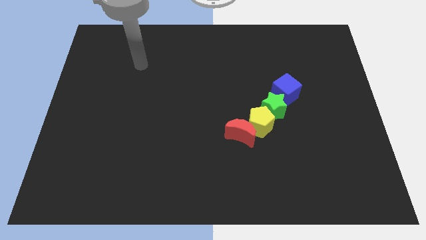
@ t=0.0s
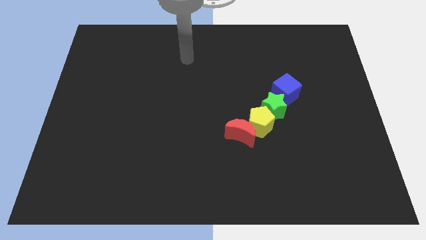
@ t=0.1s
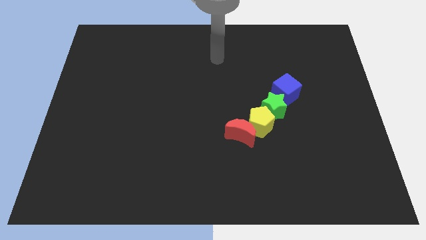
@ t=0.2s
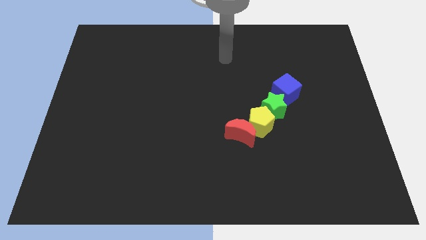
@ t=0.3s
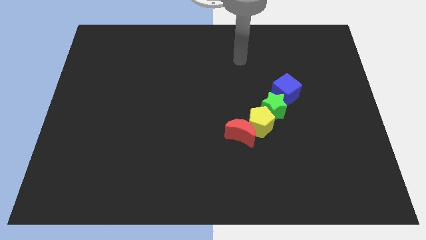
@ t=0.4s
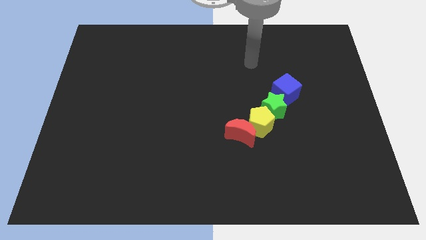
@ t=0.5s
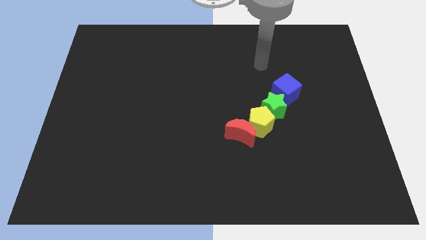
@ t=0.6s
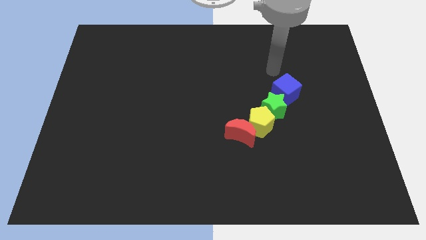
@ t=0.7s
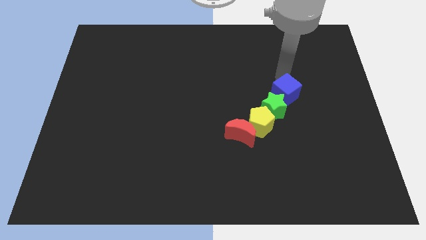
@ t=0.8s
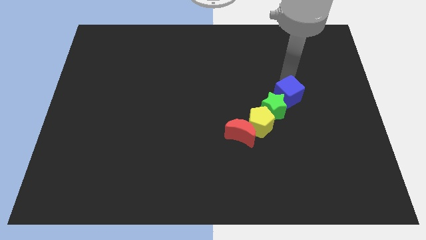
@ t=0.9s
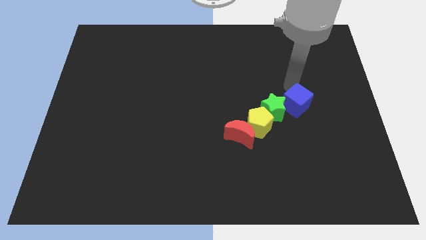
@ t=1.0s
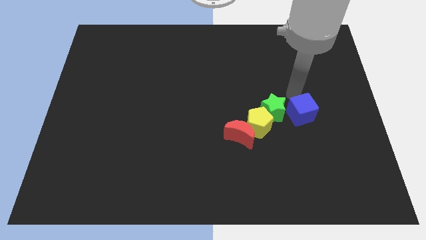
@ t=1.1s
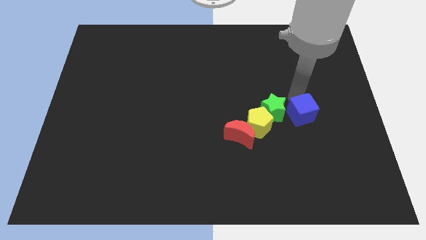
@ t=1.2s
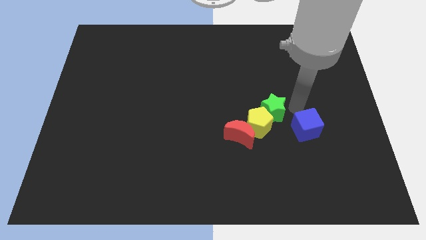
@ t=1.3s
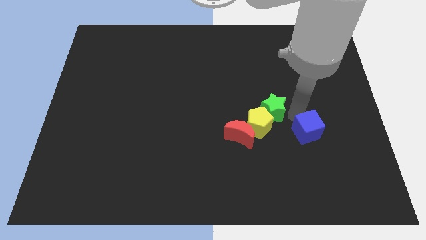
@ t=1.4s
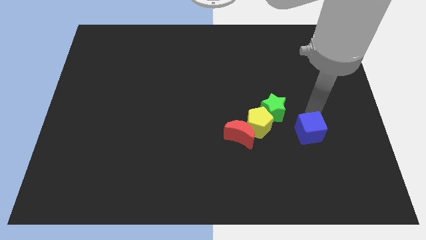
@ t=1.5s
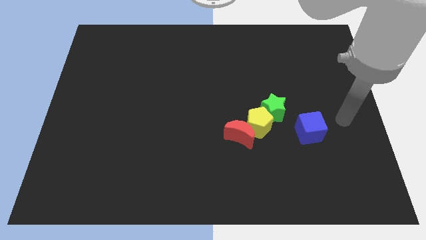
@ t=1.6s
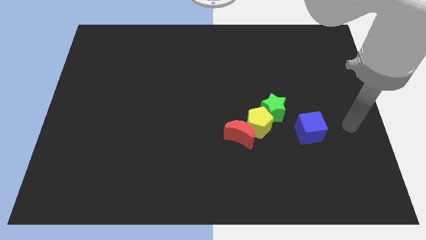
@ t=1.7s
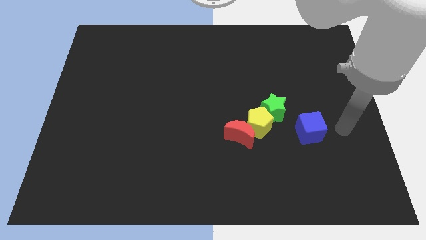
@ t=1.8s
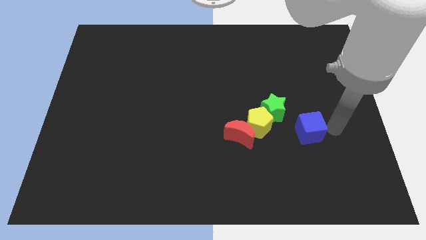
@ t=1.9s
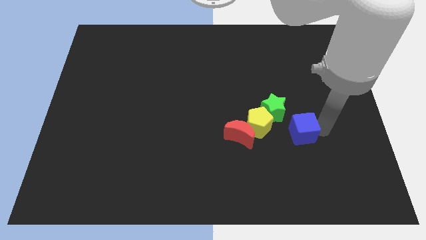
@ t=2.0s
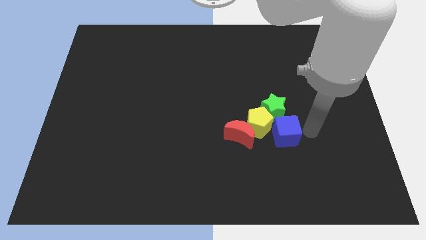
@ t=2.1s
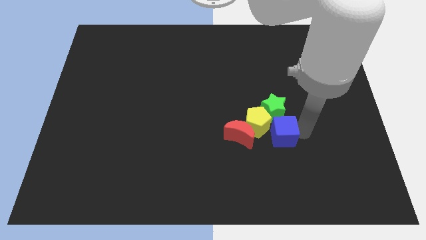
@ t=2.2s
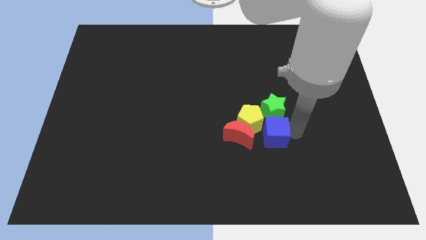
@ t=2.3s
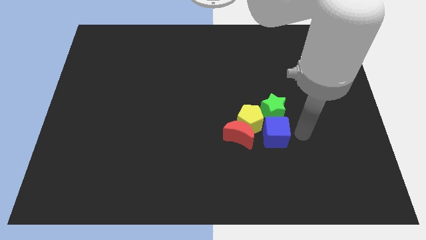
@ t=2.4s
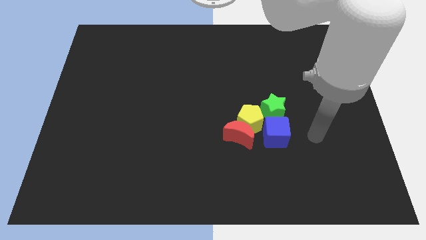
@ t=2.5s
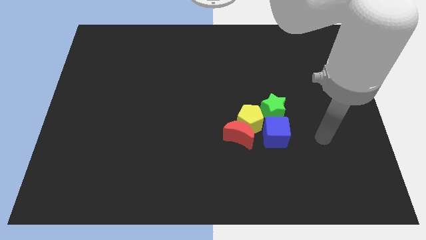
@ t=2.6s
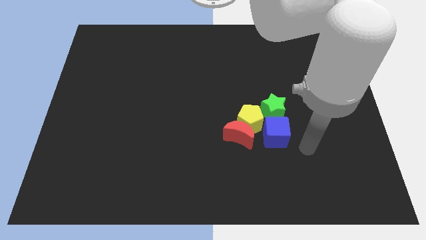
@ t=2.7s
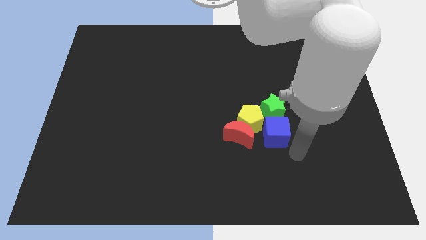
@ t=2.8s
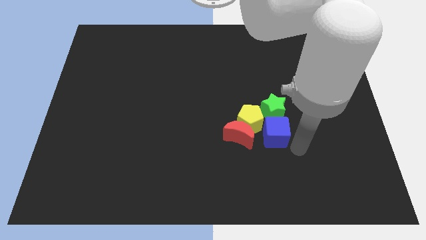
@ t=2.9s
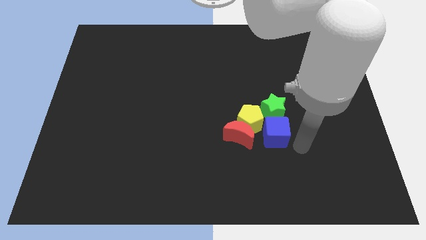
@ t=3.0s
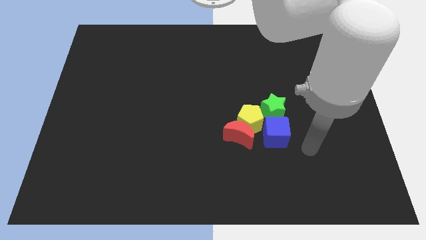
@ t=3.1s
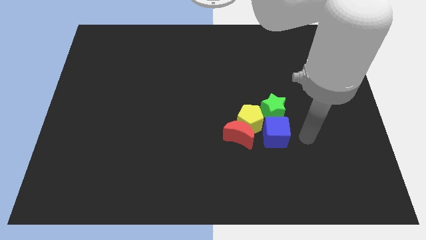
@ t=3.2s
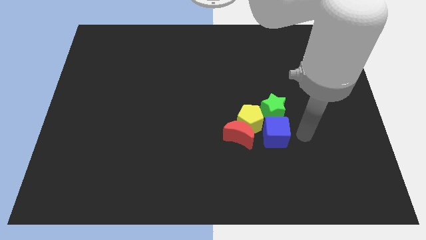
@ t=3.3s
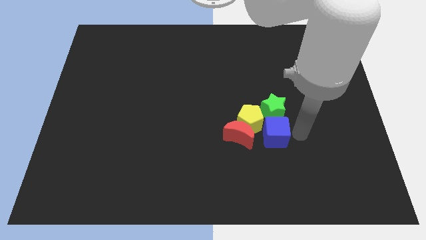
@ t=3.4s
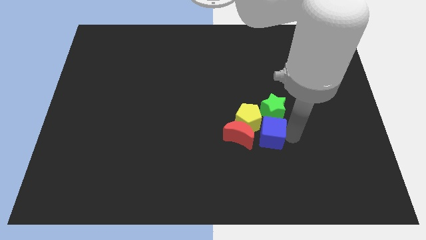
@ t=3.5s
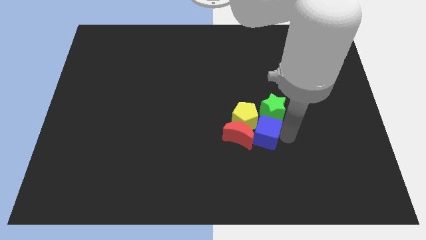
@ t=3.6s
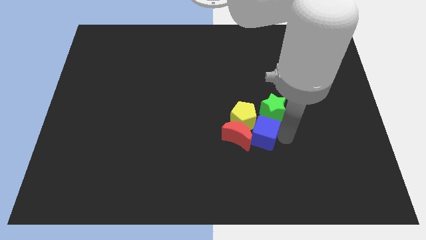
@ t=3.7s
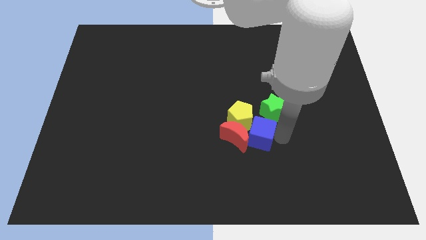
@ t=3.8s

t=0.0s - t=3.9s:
slide the cube towards the pentagon

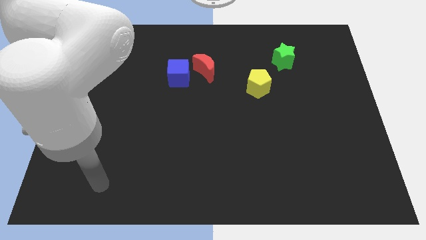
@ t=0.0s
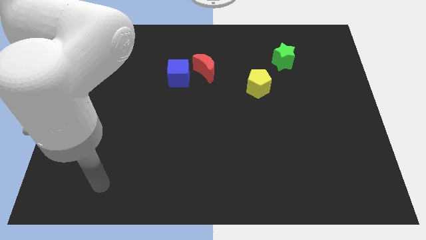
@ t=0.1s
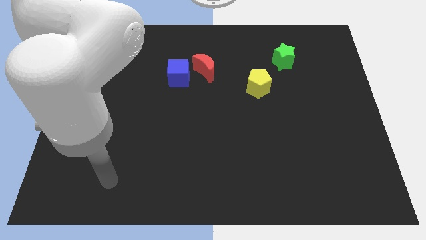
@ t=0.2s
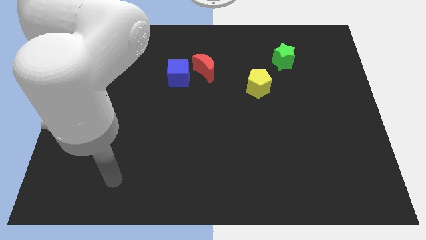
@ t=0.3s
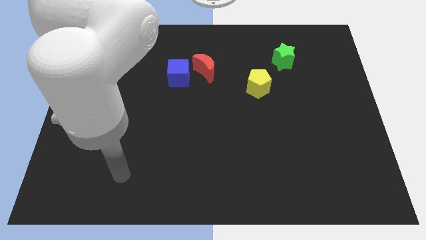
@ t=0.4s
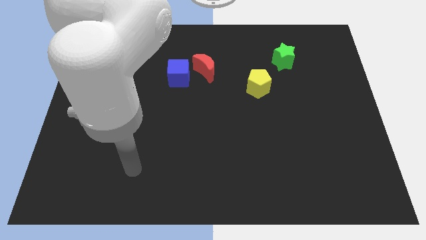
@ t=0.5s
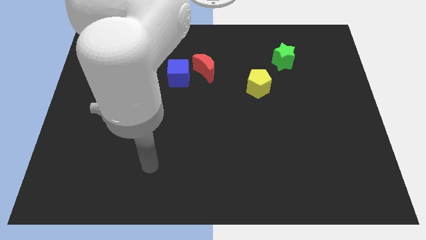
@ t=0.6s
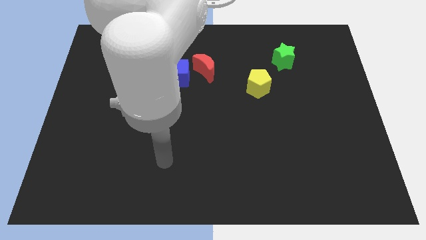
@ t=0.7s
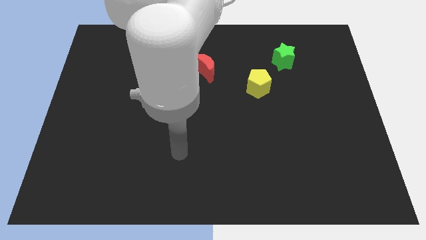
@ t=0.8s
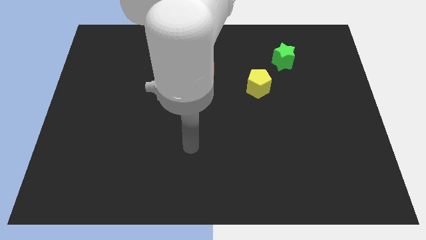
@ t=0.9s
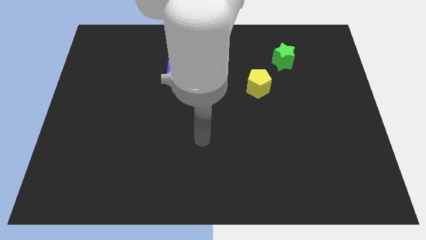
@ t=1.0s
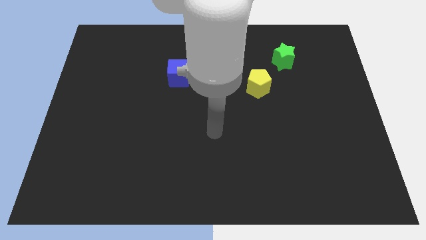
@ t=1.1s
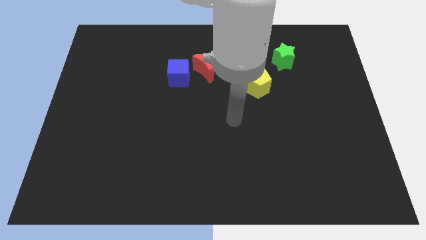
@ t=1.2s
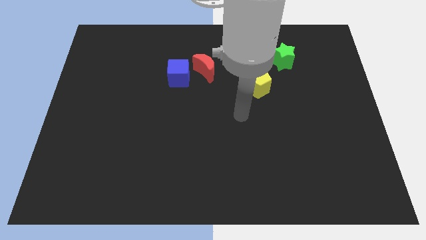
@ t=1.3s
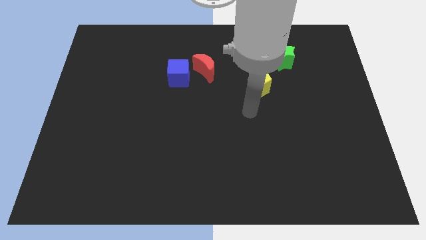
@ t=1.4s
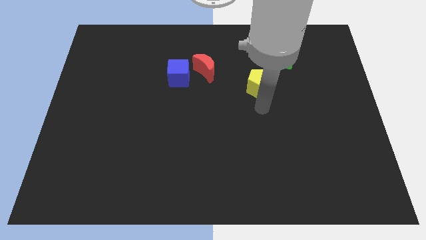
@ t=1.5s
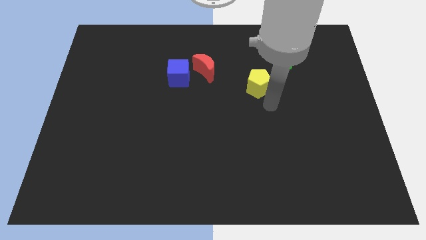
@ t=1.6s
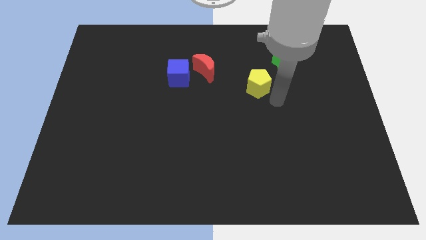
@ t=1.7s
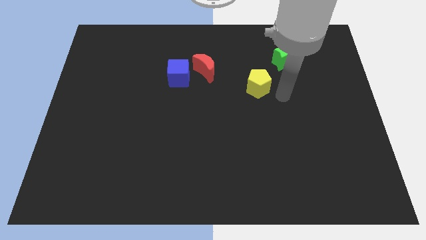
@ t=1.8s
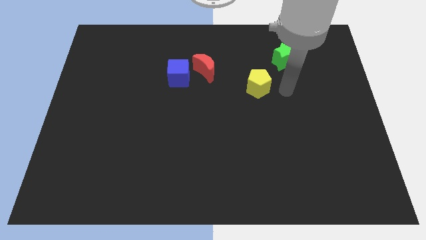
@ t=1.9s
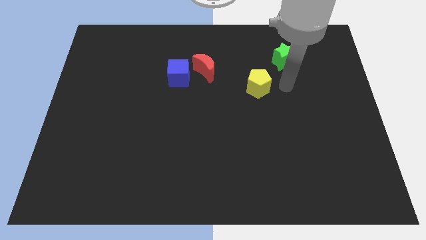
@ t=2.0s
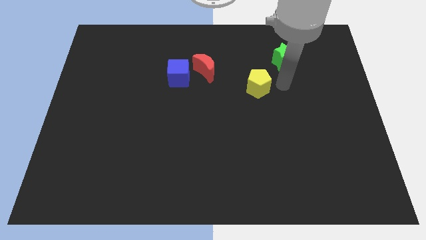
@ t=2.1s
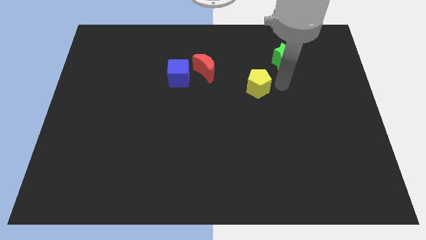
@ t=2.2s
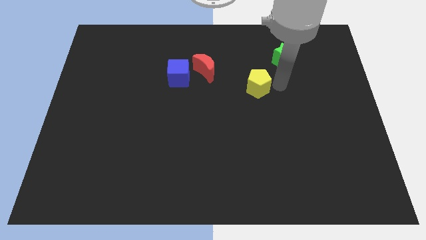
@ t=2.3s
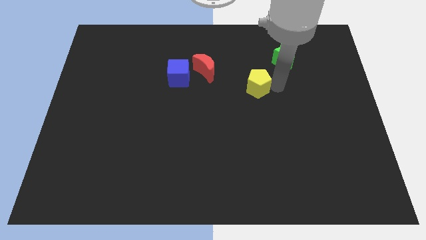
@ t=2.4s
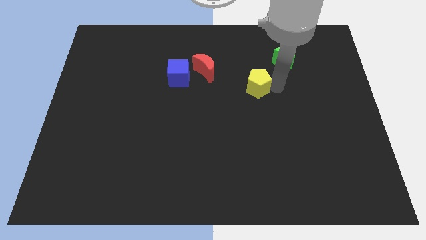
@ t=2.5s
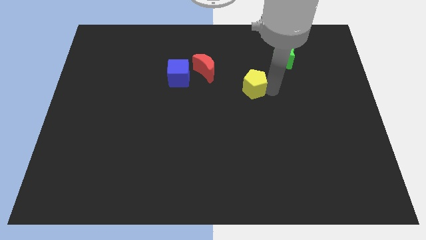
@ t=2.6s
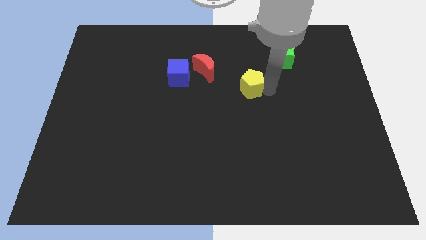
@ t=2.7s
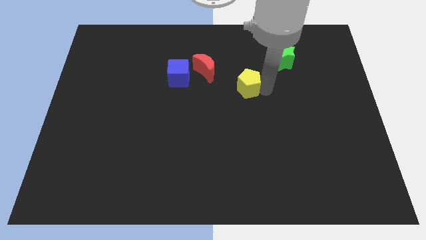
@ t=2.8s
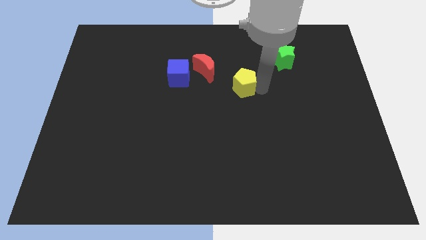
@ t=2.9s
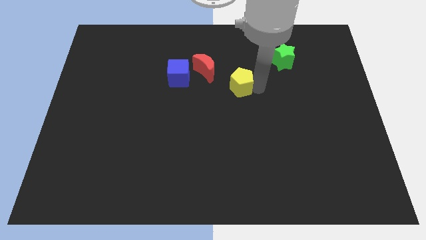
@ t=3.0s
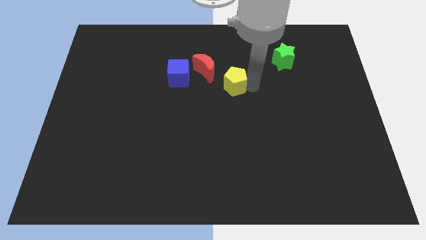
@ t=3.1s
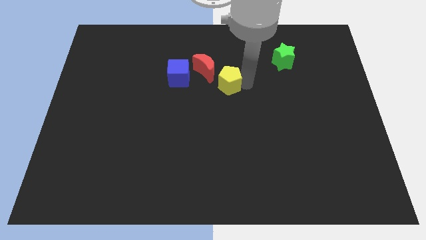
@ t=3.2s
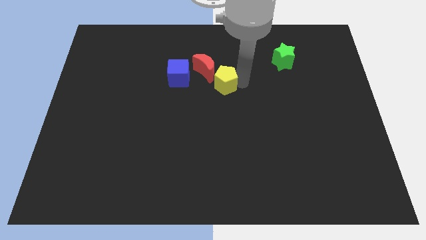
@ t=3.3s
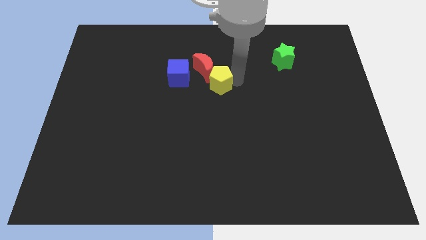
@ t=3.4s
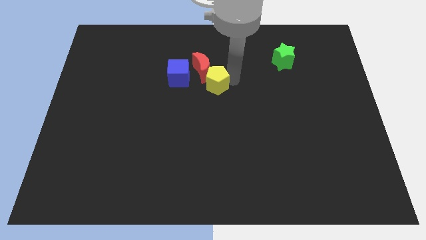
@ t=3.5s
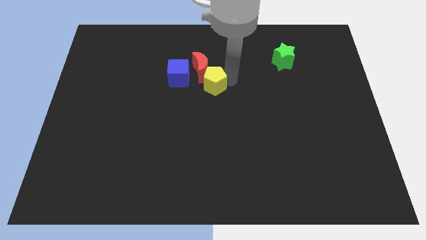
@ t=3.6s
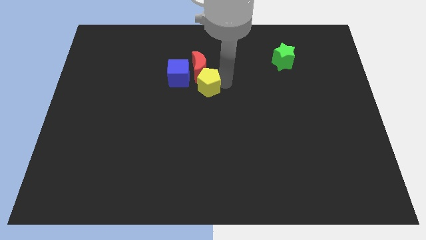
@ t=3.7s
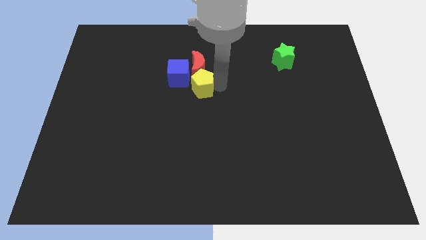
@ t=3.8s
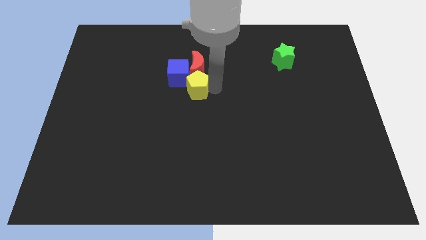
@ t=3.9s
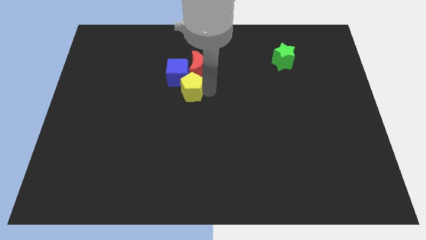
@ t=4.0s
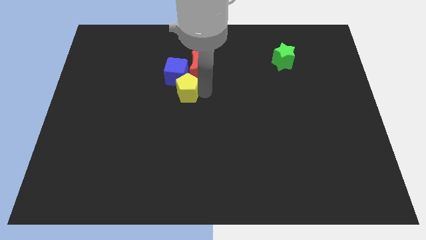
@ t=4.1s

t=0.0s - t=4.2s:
put the yellow block towards the blue cube
